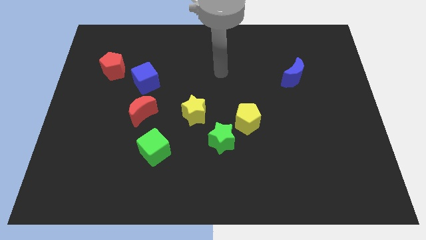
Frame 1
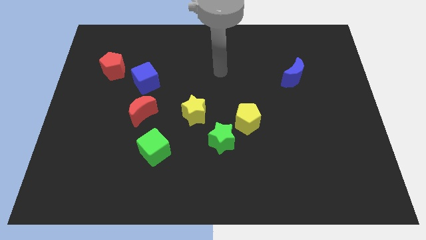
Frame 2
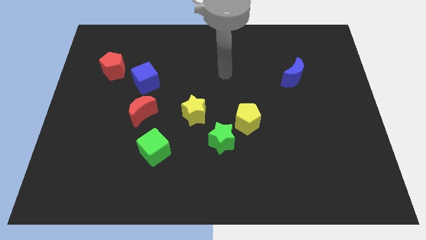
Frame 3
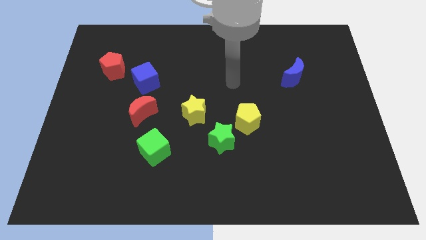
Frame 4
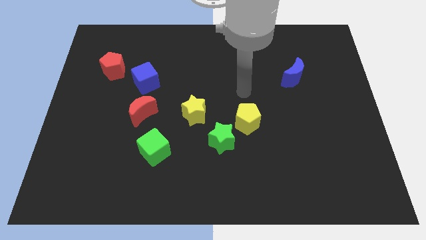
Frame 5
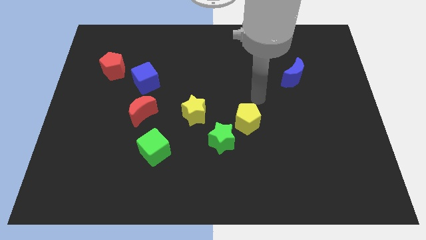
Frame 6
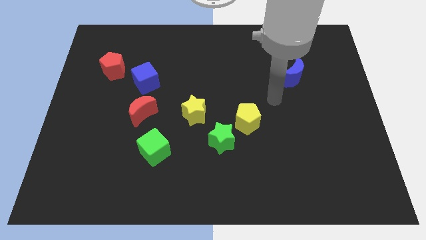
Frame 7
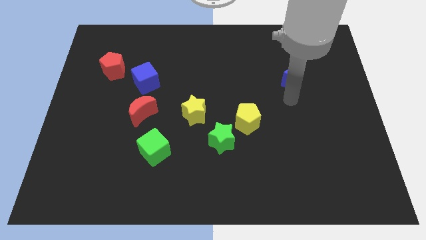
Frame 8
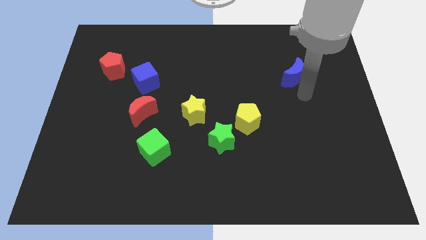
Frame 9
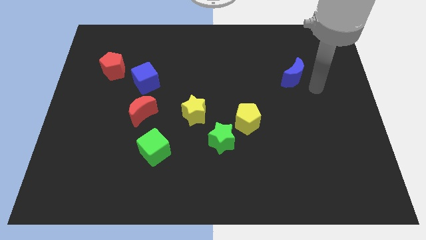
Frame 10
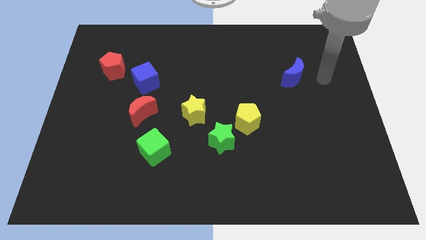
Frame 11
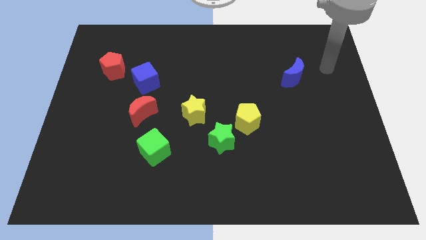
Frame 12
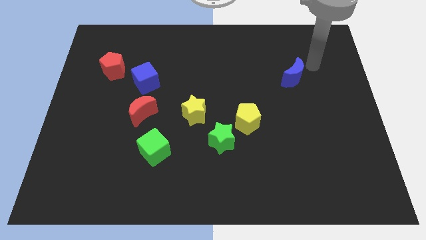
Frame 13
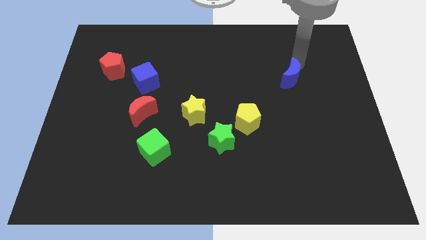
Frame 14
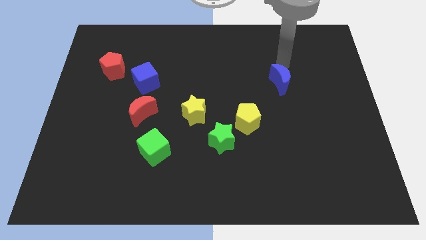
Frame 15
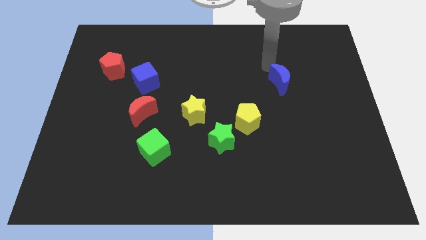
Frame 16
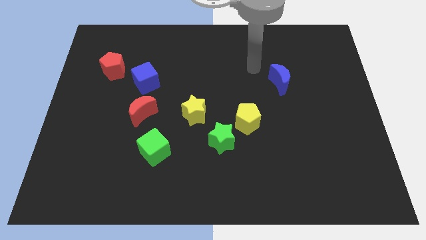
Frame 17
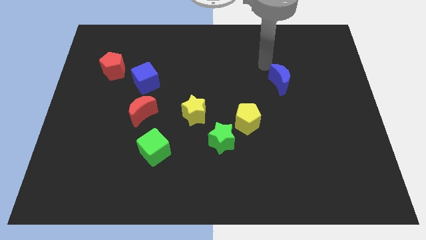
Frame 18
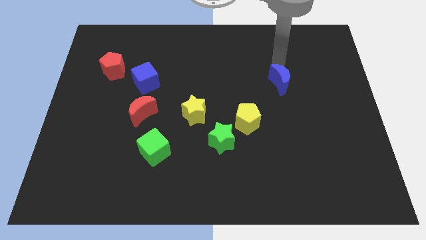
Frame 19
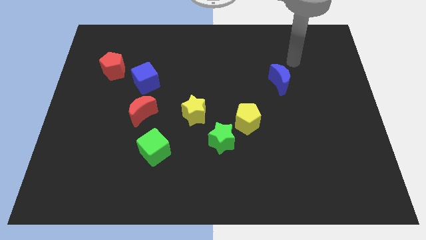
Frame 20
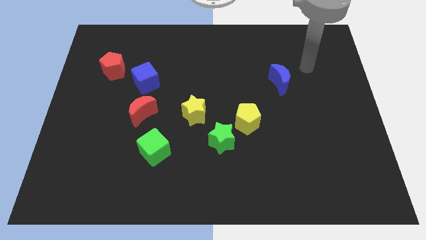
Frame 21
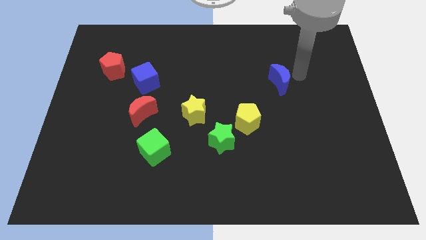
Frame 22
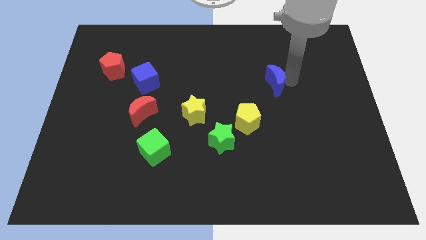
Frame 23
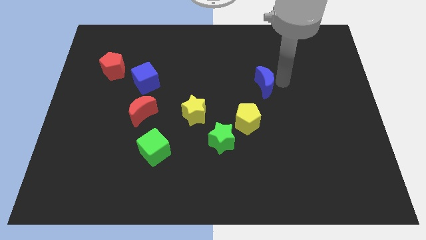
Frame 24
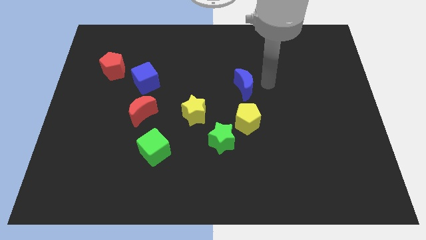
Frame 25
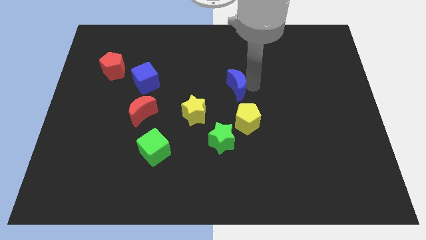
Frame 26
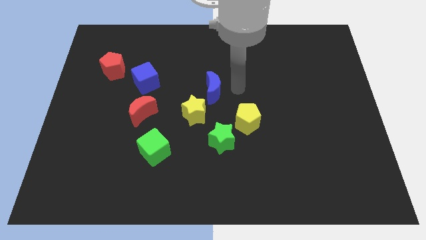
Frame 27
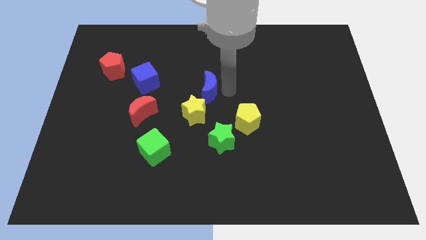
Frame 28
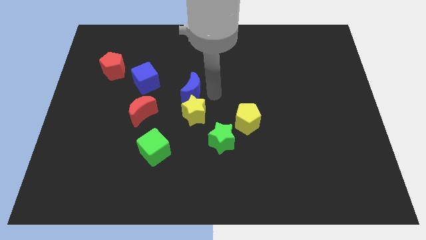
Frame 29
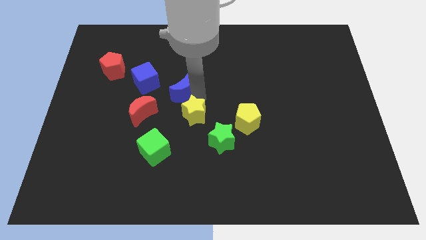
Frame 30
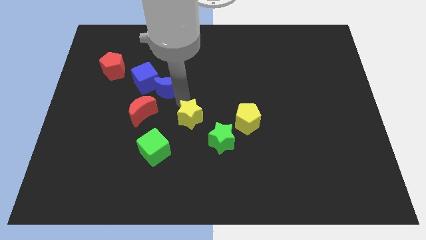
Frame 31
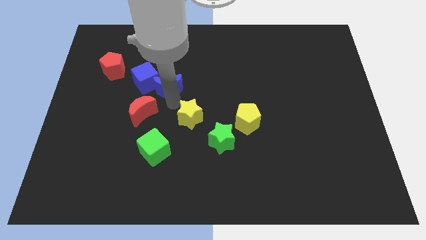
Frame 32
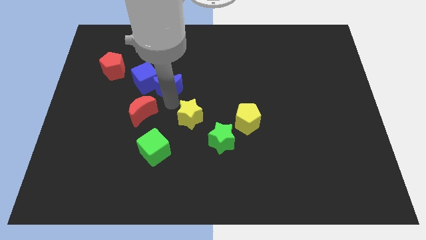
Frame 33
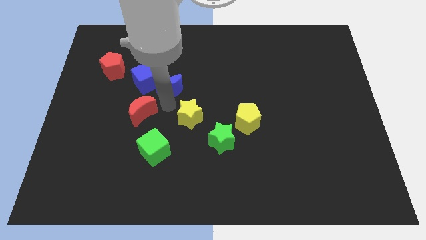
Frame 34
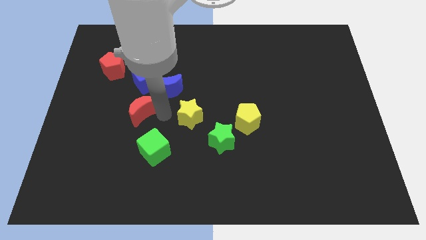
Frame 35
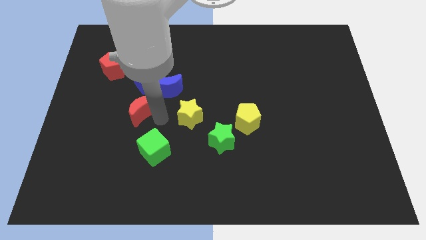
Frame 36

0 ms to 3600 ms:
drag the blue moon towards the blue cube

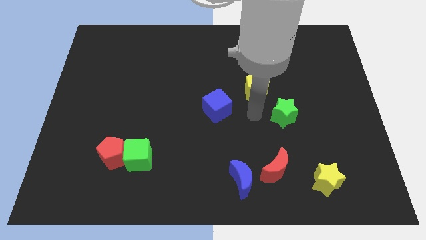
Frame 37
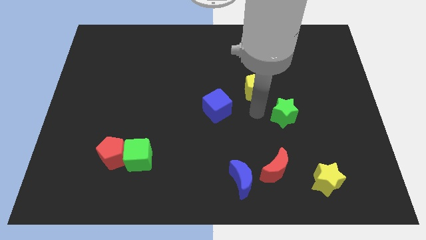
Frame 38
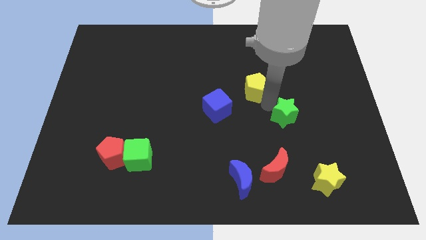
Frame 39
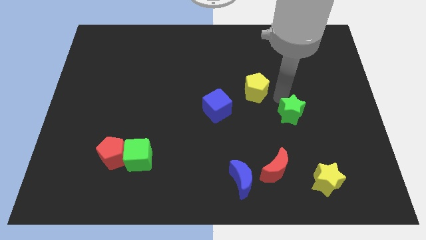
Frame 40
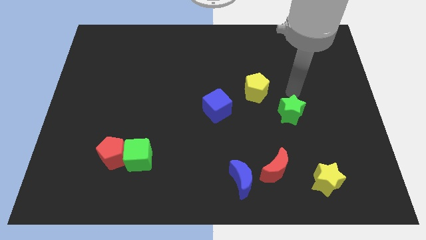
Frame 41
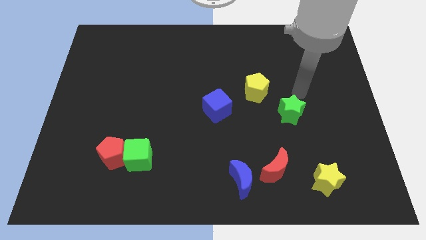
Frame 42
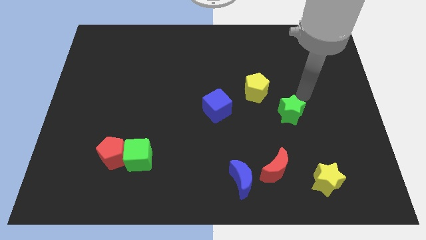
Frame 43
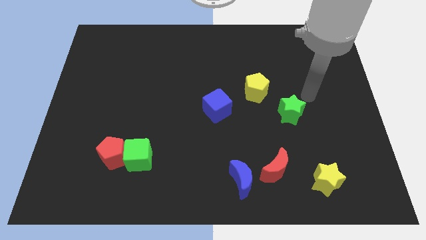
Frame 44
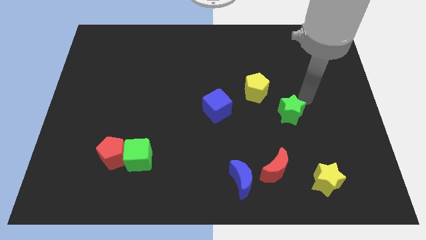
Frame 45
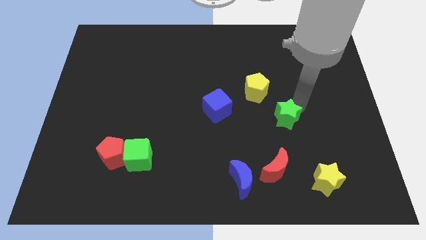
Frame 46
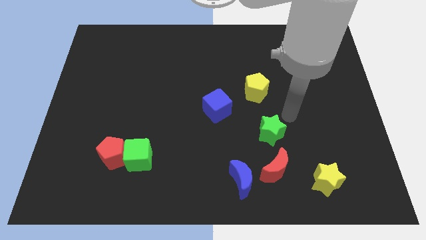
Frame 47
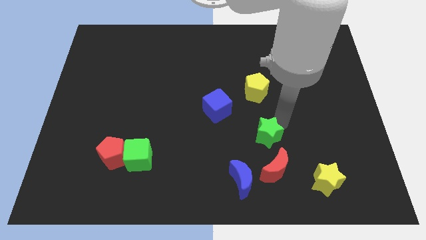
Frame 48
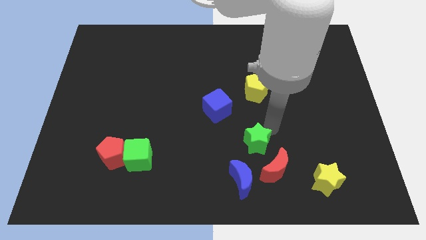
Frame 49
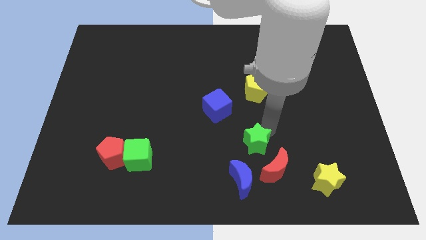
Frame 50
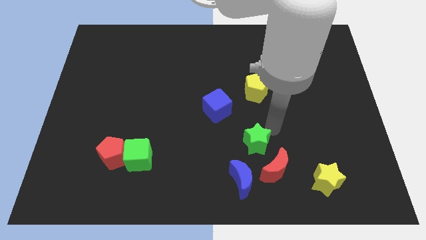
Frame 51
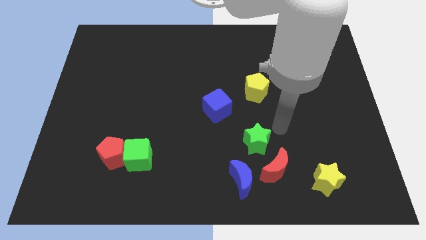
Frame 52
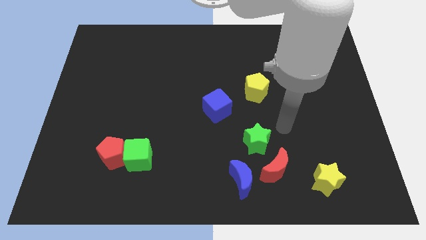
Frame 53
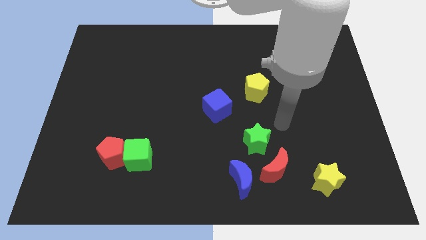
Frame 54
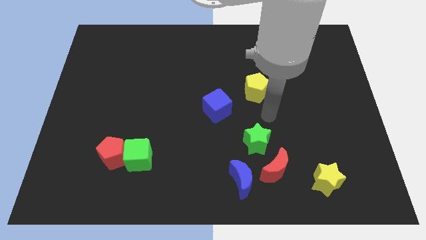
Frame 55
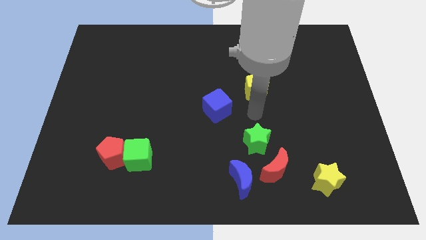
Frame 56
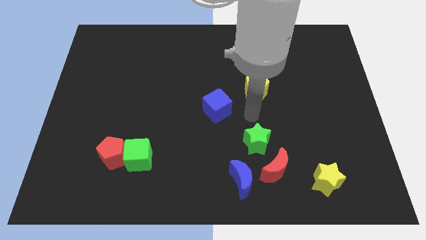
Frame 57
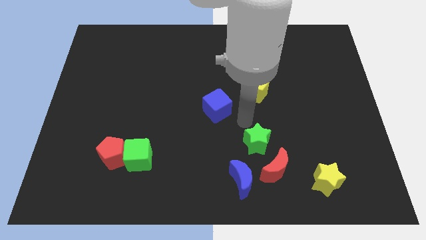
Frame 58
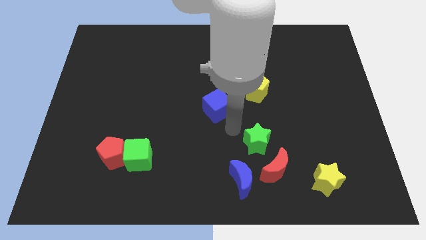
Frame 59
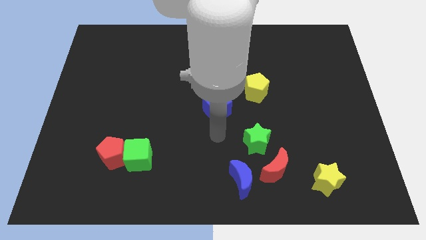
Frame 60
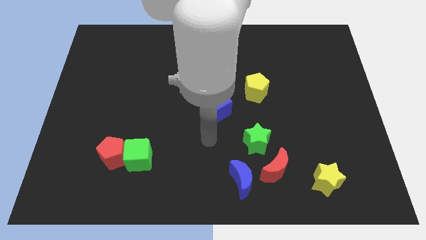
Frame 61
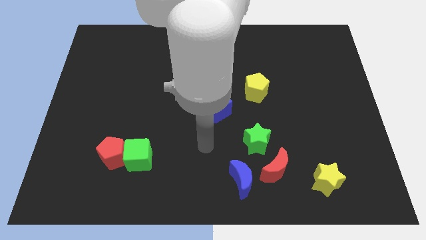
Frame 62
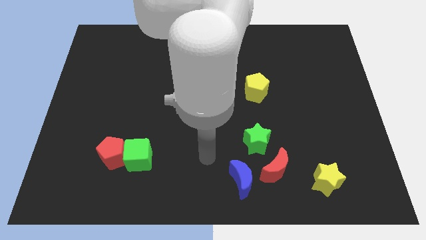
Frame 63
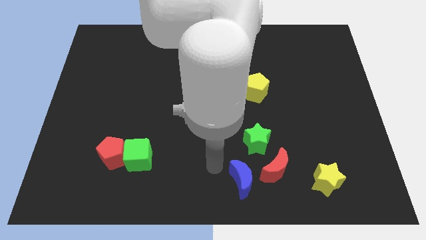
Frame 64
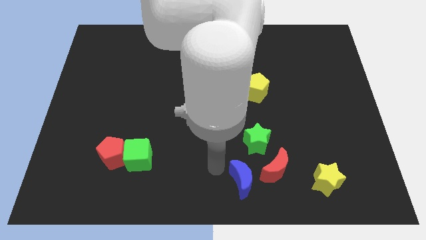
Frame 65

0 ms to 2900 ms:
place the green star on the top of red and blue moon

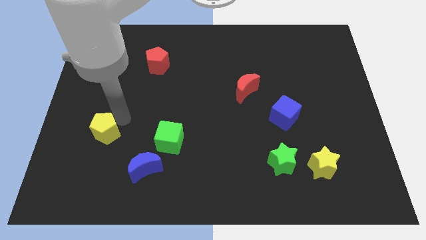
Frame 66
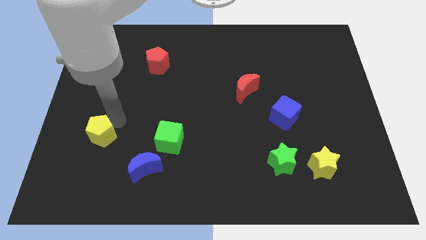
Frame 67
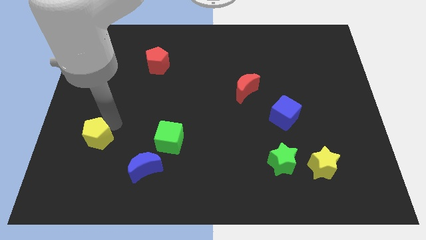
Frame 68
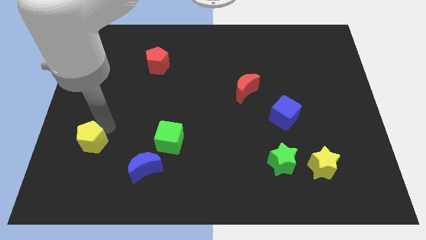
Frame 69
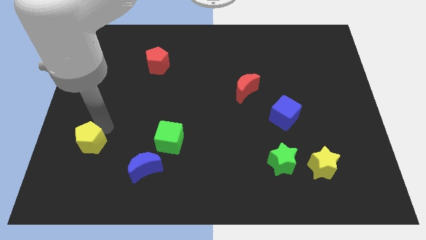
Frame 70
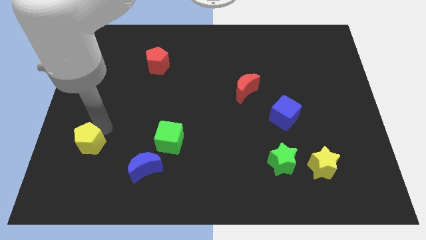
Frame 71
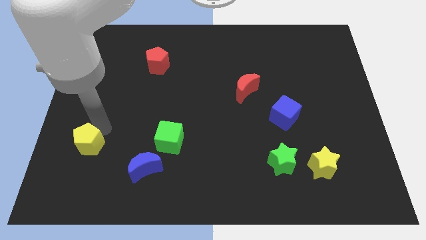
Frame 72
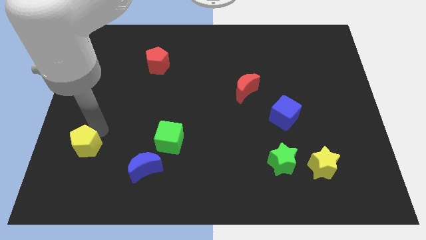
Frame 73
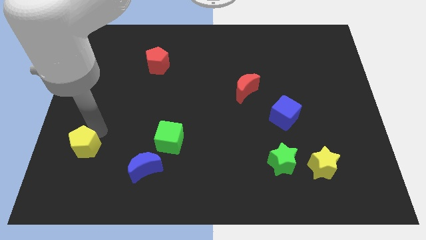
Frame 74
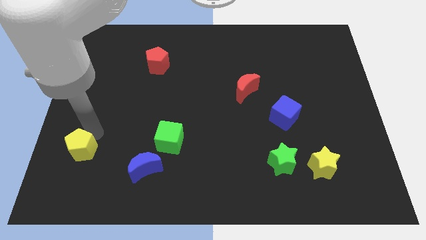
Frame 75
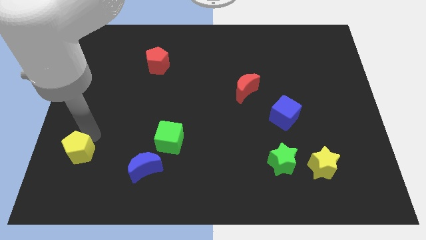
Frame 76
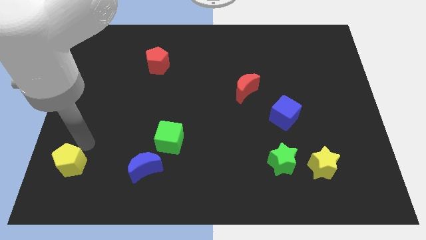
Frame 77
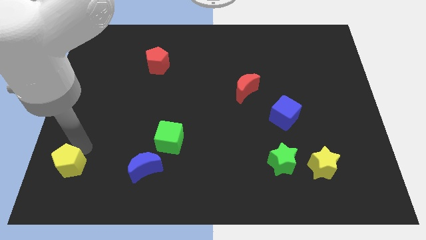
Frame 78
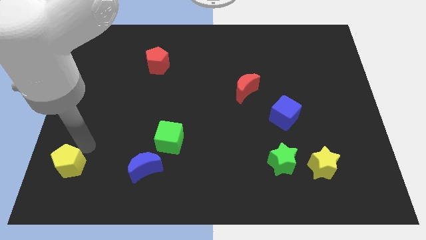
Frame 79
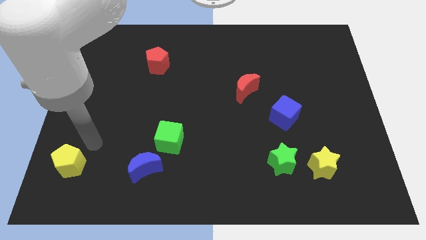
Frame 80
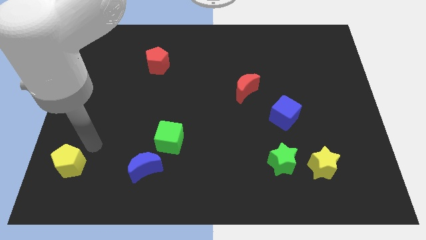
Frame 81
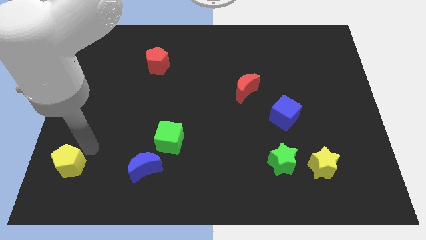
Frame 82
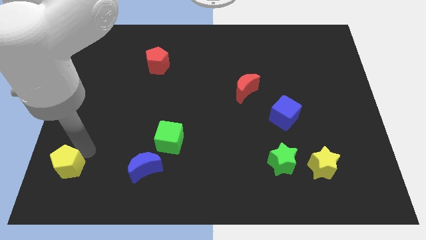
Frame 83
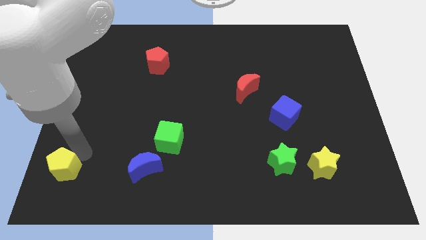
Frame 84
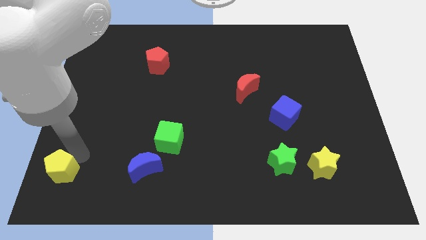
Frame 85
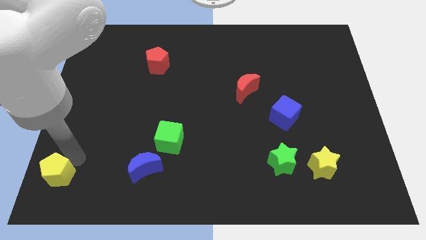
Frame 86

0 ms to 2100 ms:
push yellow pentagon towards bottom left

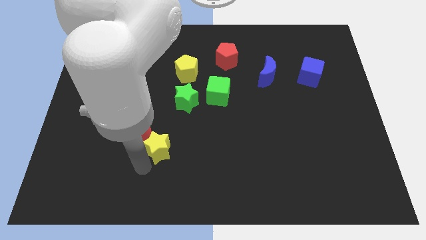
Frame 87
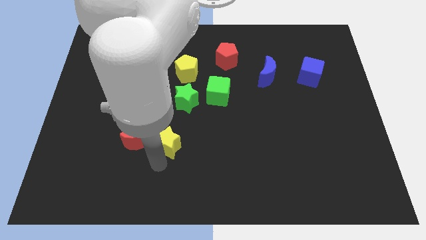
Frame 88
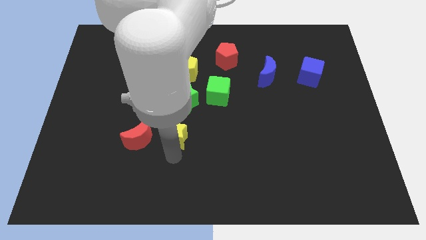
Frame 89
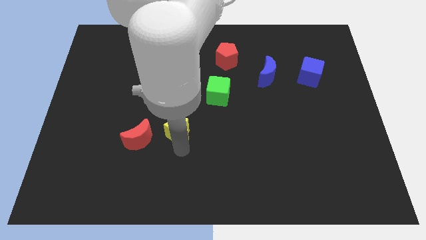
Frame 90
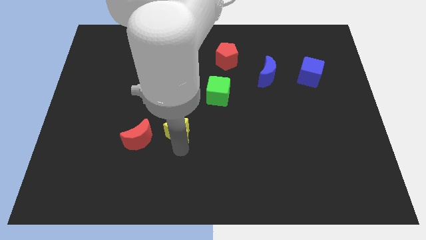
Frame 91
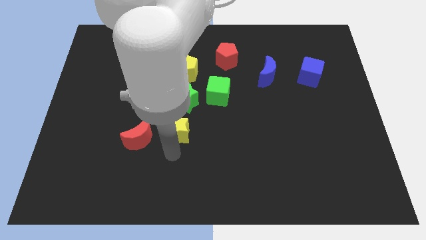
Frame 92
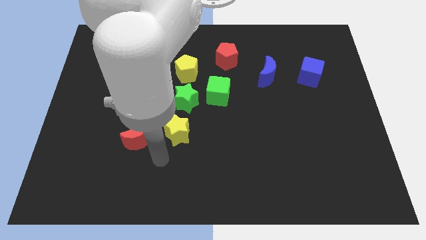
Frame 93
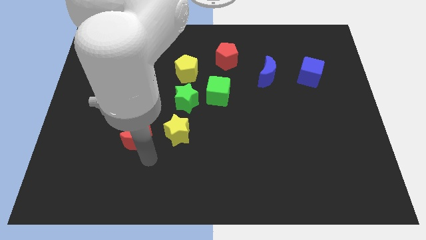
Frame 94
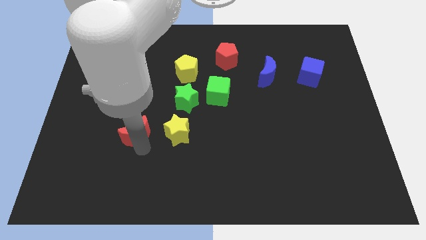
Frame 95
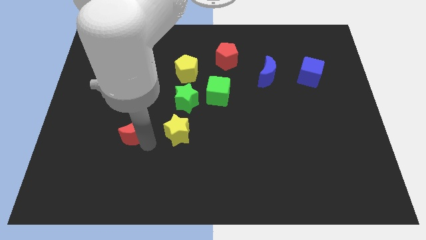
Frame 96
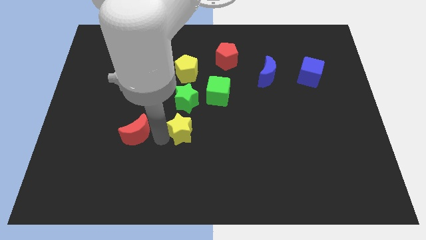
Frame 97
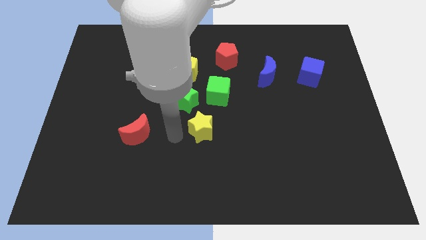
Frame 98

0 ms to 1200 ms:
separate yellow star from red moon
